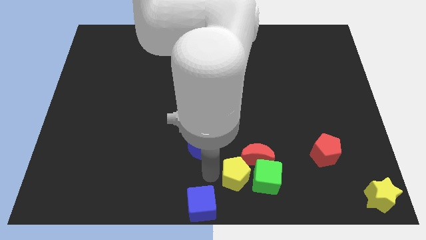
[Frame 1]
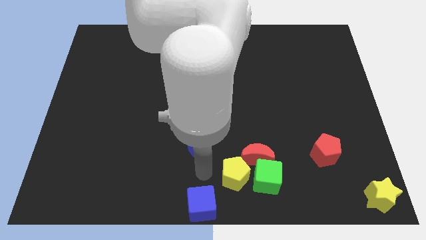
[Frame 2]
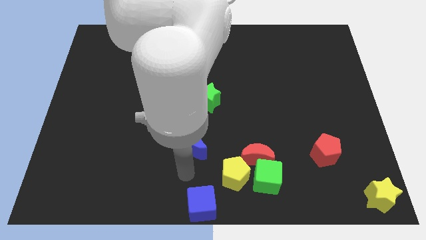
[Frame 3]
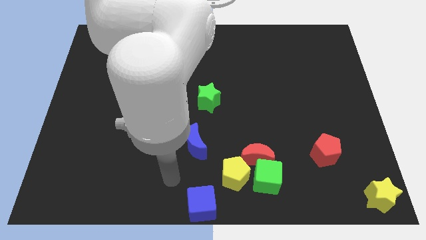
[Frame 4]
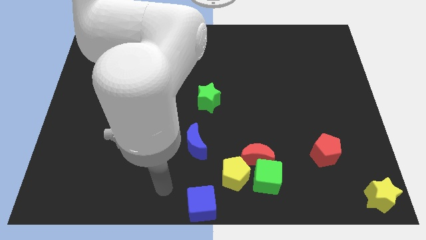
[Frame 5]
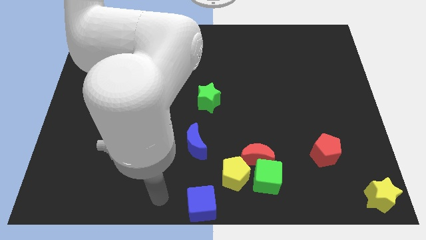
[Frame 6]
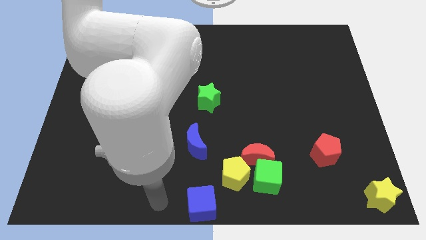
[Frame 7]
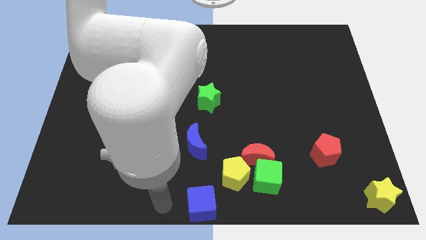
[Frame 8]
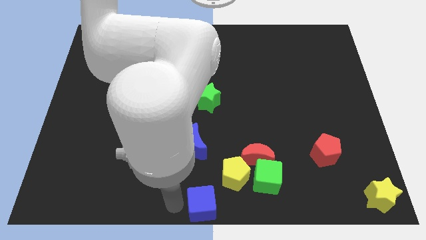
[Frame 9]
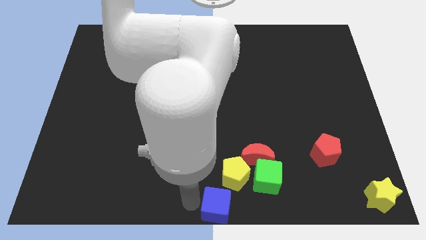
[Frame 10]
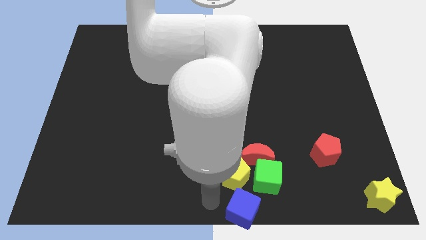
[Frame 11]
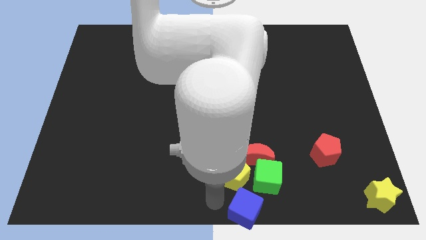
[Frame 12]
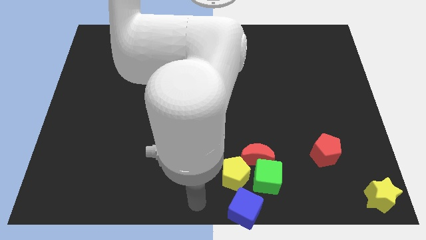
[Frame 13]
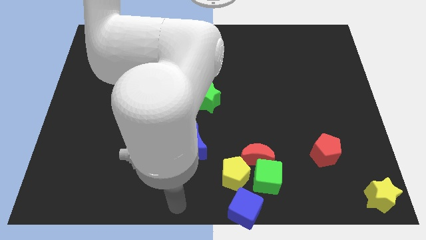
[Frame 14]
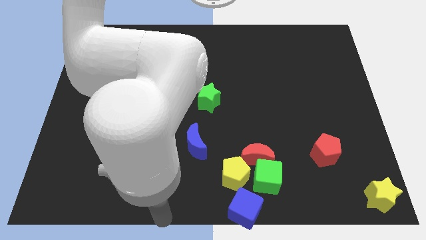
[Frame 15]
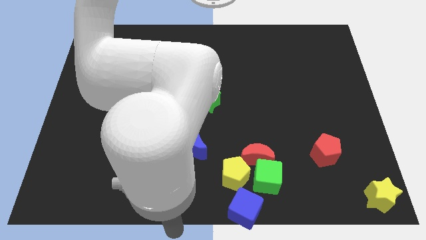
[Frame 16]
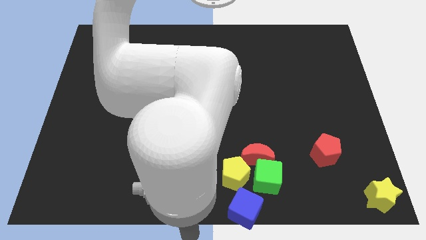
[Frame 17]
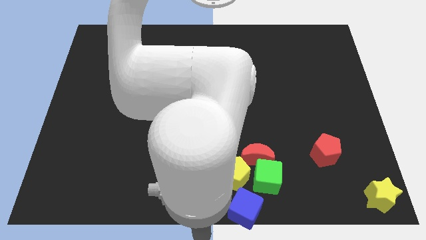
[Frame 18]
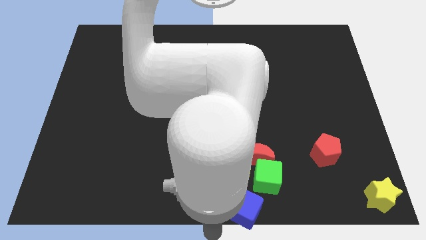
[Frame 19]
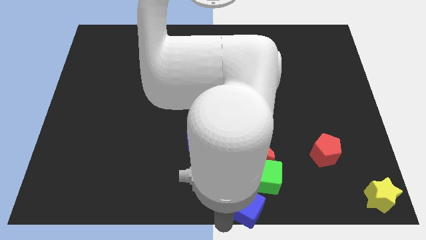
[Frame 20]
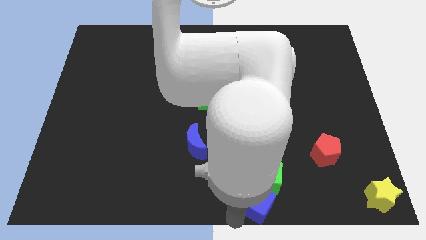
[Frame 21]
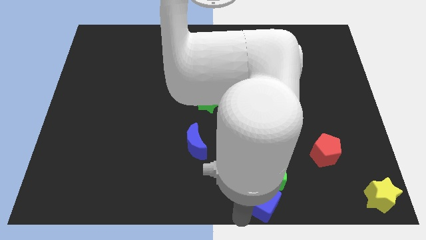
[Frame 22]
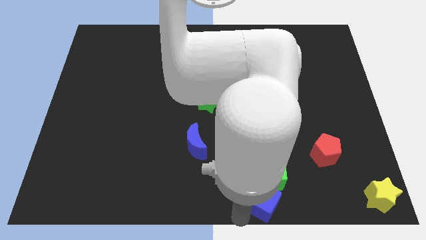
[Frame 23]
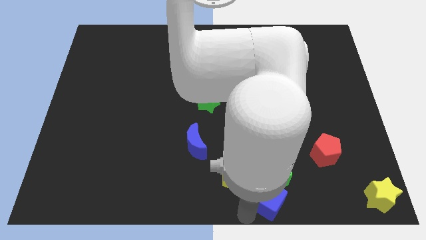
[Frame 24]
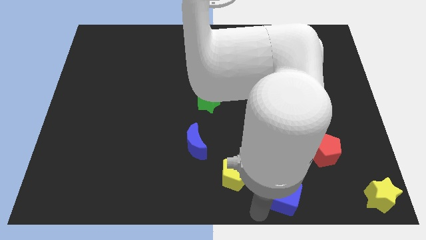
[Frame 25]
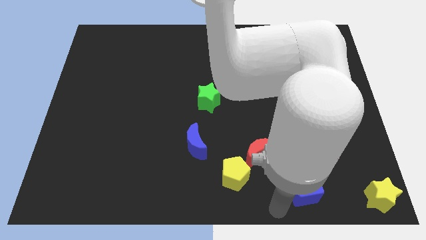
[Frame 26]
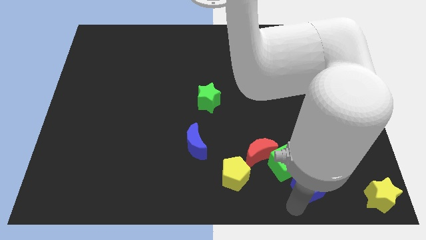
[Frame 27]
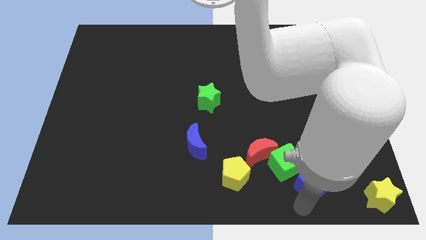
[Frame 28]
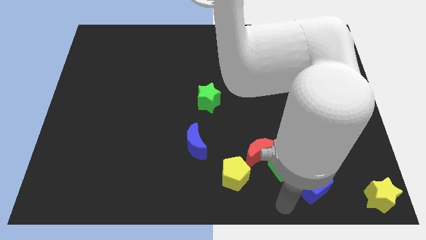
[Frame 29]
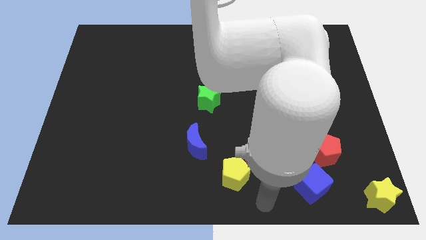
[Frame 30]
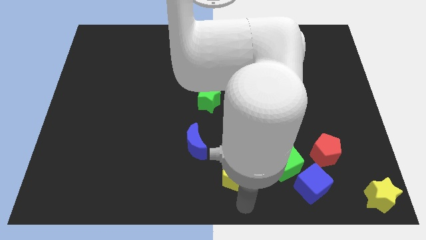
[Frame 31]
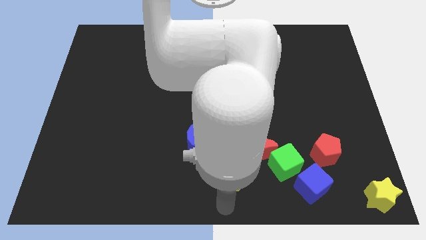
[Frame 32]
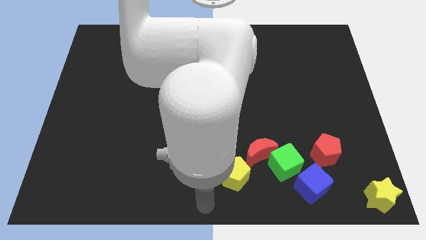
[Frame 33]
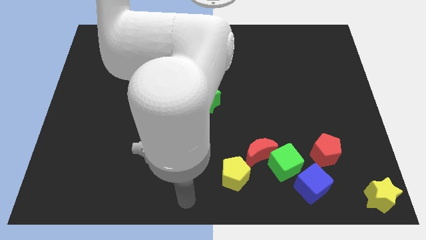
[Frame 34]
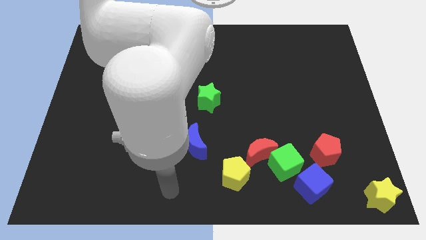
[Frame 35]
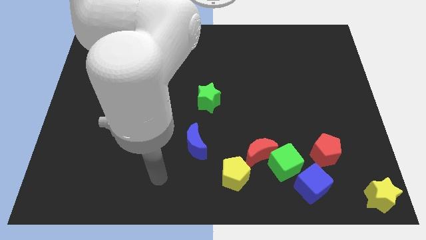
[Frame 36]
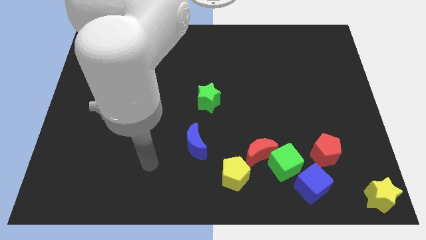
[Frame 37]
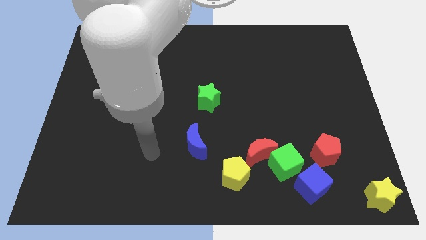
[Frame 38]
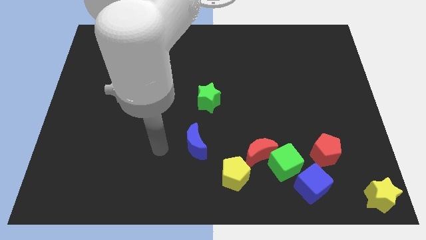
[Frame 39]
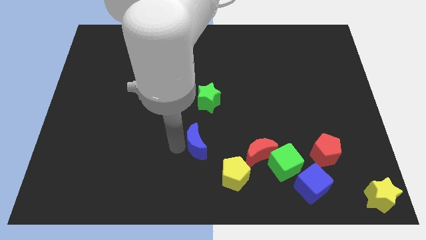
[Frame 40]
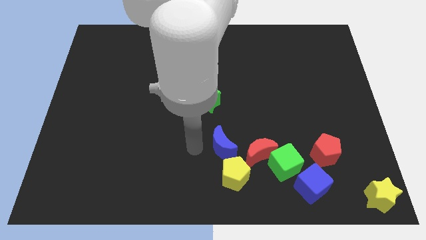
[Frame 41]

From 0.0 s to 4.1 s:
move the blue cube to the bottom right of the green cube

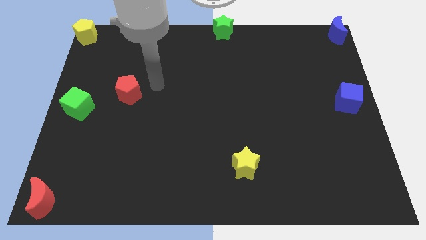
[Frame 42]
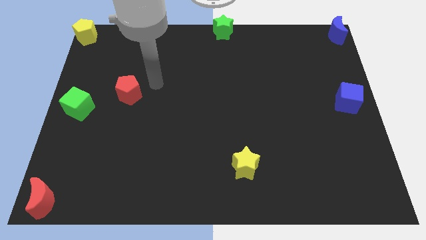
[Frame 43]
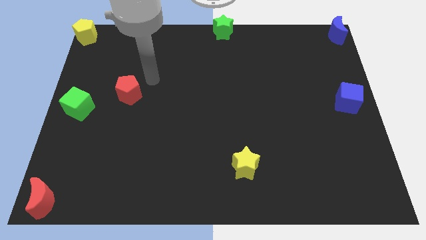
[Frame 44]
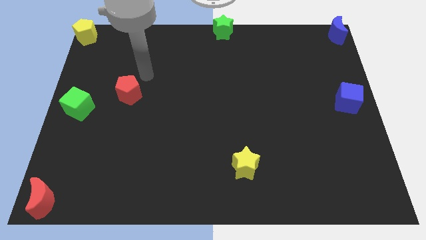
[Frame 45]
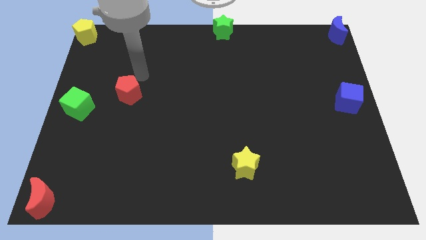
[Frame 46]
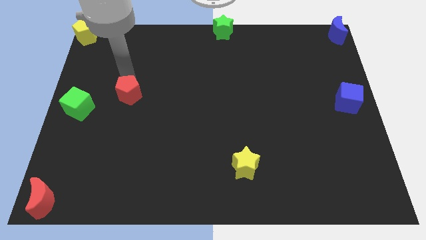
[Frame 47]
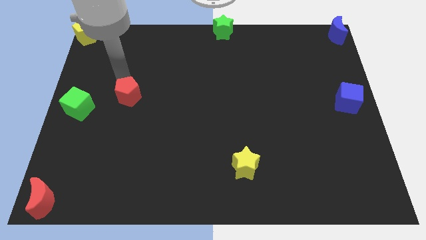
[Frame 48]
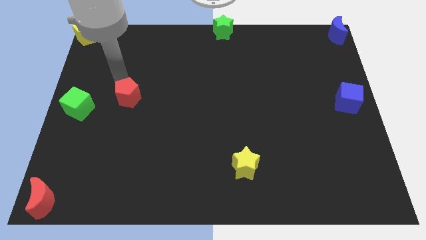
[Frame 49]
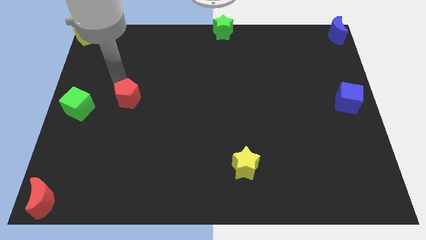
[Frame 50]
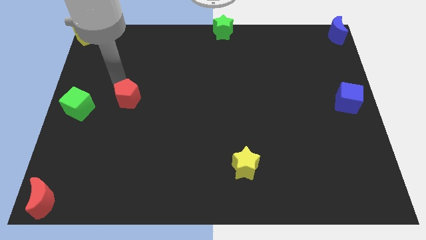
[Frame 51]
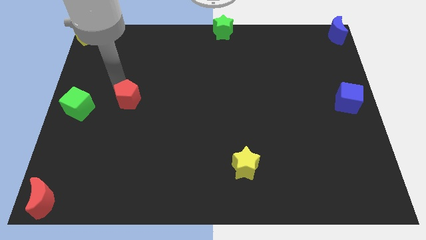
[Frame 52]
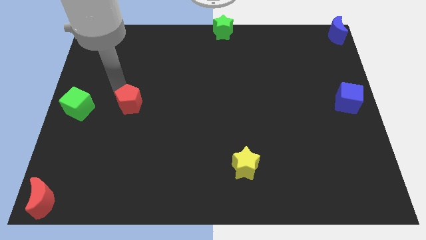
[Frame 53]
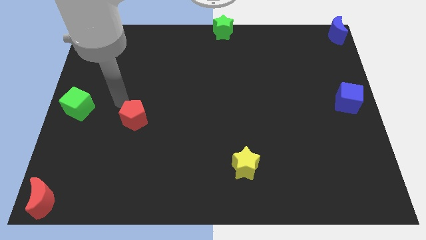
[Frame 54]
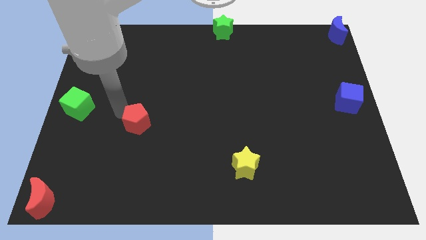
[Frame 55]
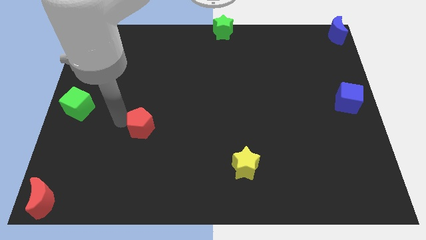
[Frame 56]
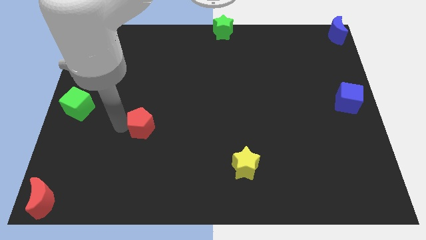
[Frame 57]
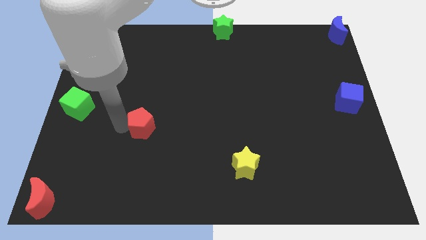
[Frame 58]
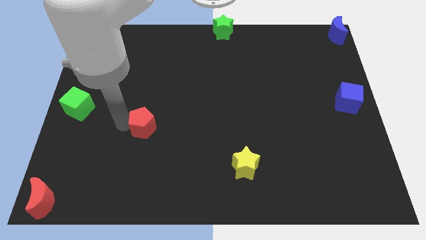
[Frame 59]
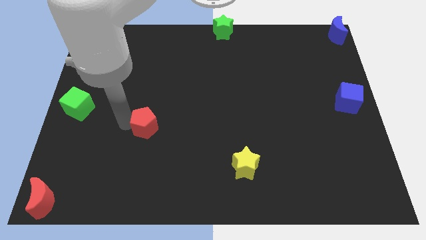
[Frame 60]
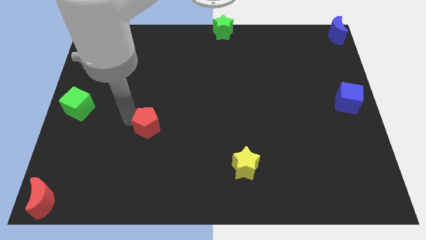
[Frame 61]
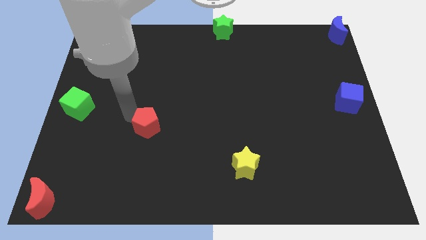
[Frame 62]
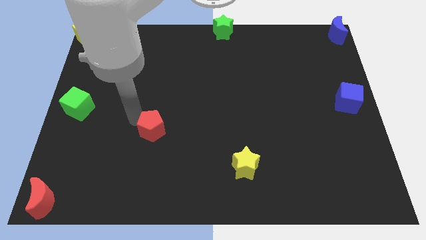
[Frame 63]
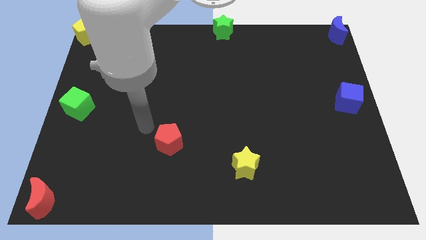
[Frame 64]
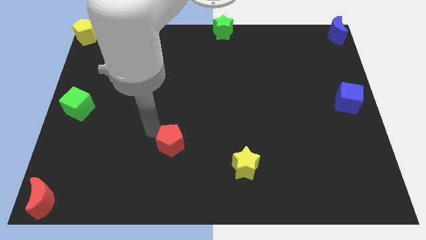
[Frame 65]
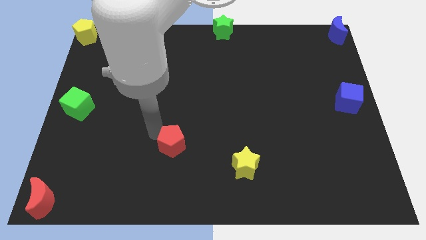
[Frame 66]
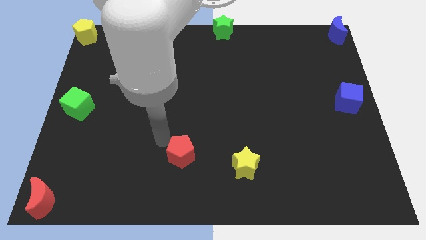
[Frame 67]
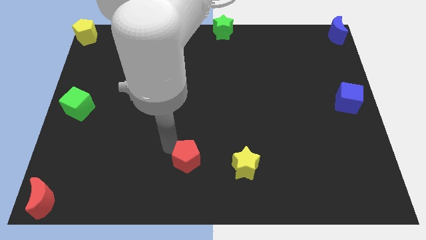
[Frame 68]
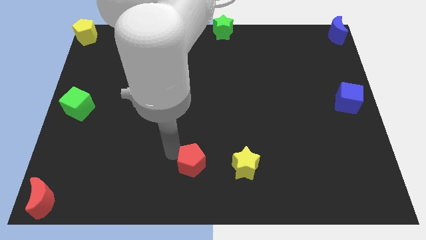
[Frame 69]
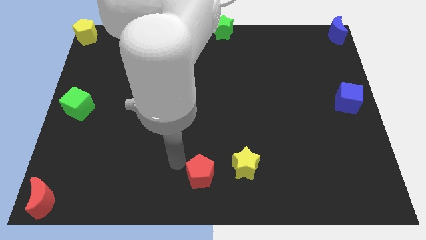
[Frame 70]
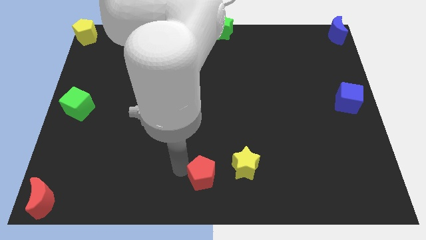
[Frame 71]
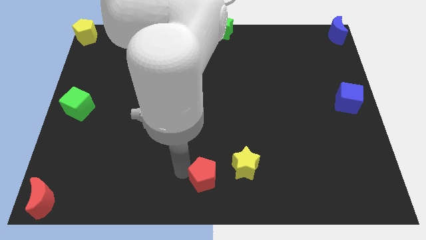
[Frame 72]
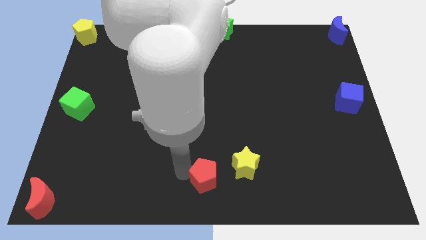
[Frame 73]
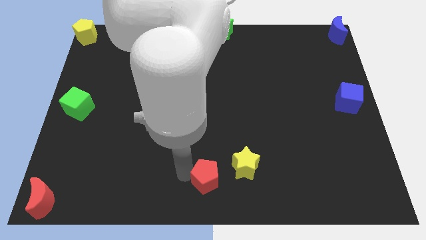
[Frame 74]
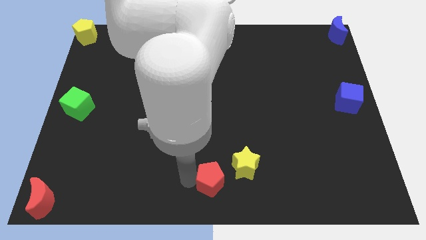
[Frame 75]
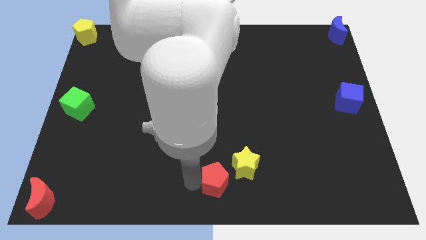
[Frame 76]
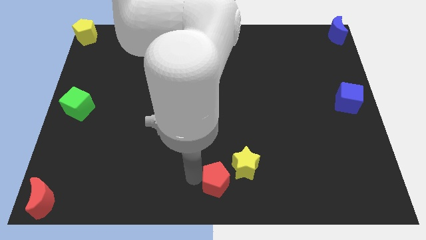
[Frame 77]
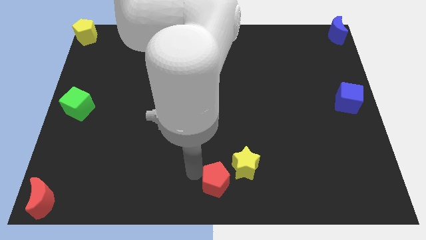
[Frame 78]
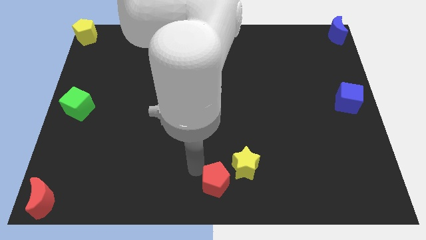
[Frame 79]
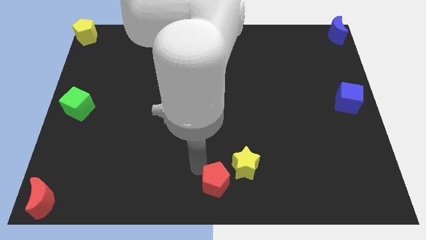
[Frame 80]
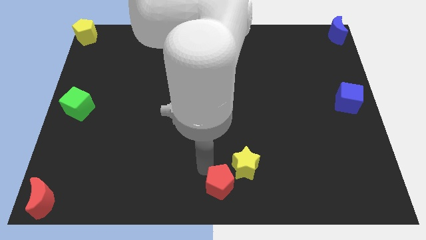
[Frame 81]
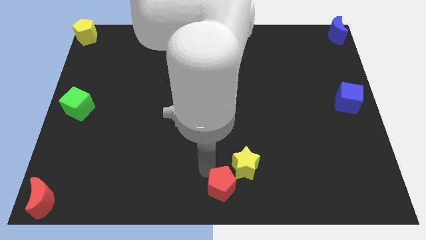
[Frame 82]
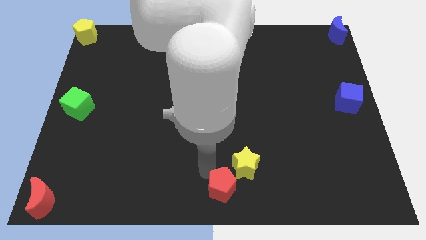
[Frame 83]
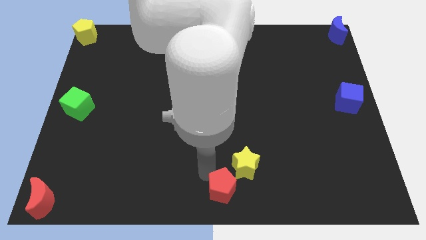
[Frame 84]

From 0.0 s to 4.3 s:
place red pentagon to the bottom left of the yellow star

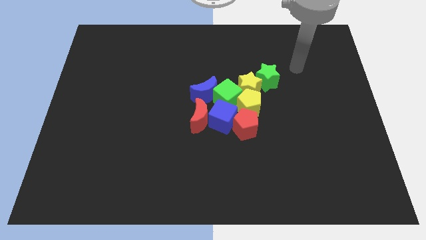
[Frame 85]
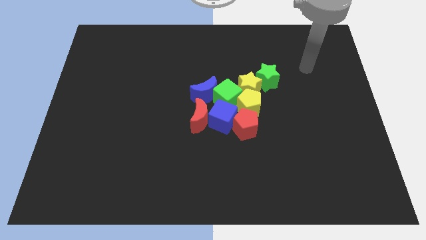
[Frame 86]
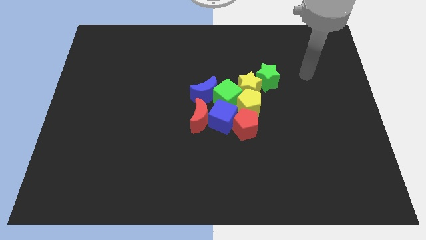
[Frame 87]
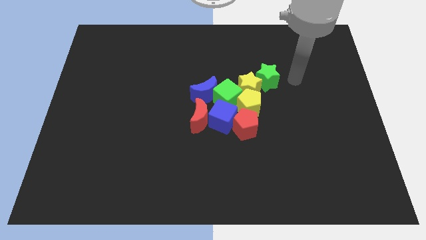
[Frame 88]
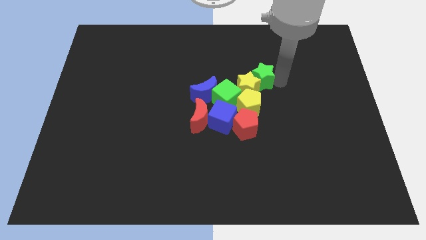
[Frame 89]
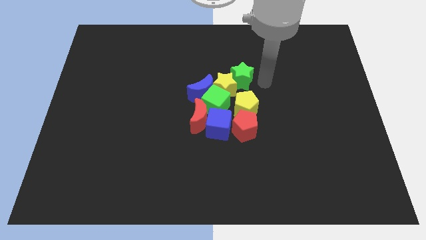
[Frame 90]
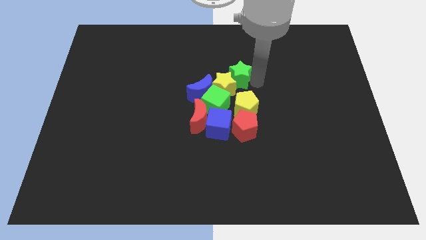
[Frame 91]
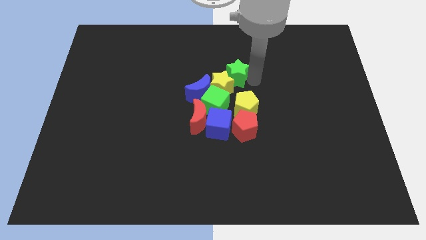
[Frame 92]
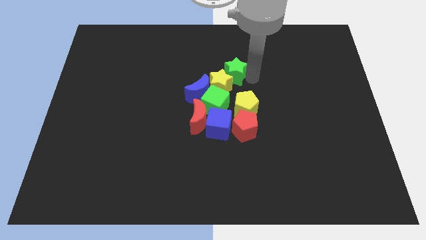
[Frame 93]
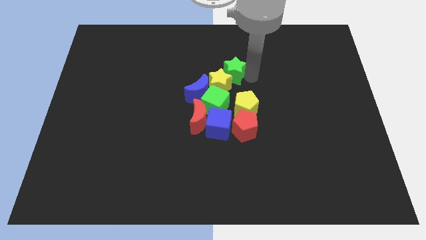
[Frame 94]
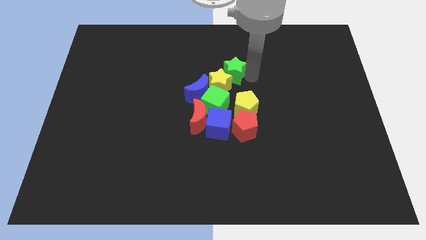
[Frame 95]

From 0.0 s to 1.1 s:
move the yellow star with the green star
